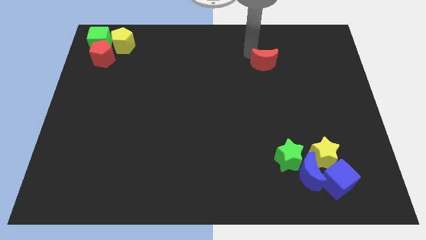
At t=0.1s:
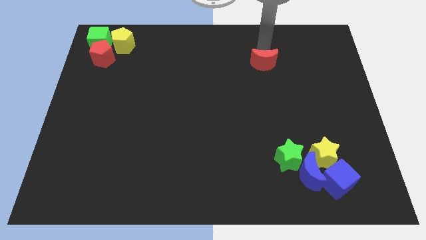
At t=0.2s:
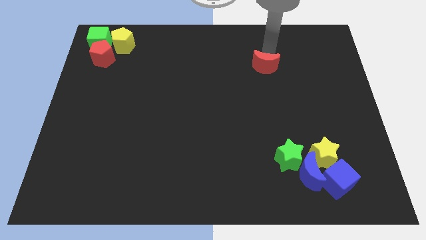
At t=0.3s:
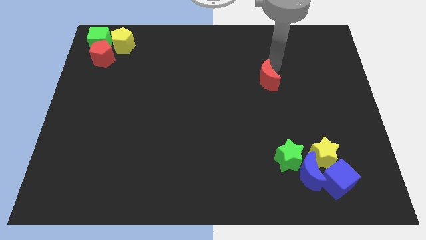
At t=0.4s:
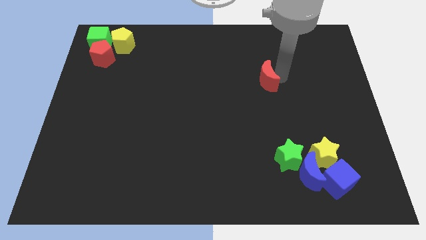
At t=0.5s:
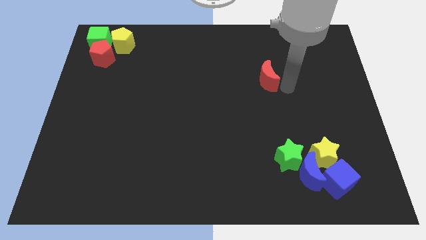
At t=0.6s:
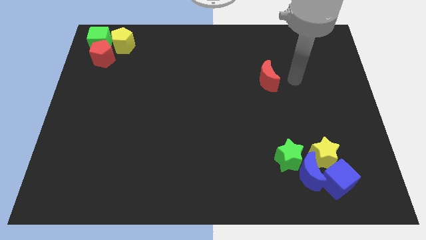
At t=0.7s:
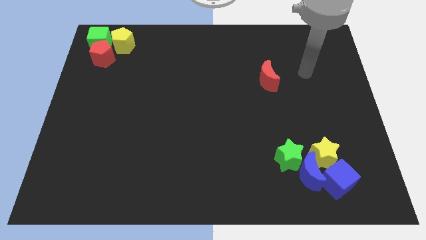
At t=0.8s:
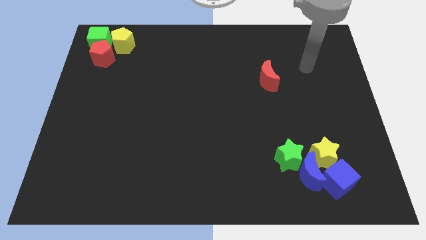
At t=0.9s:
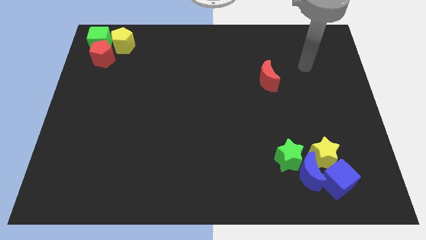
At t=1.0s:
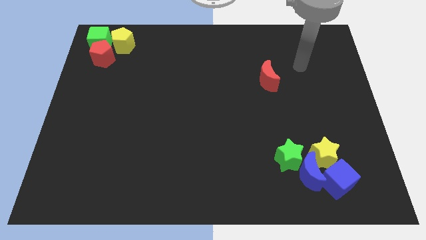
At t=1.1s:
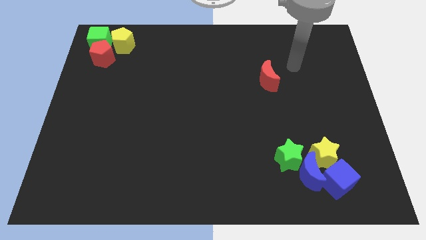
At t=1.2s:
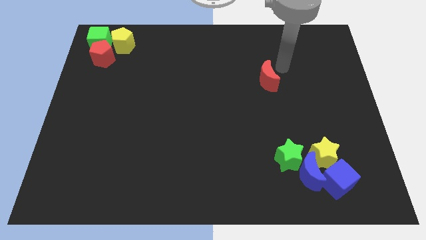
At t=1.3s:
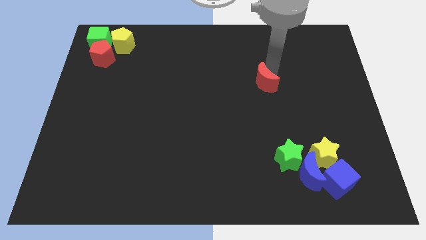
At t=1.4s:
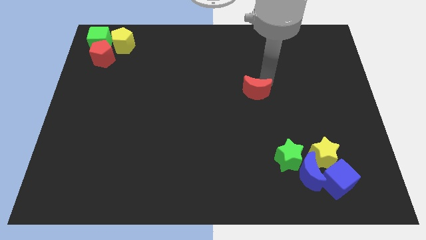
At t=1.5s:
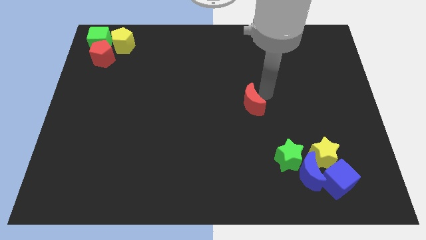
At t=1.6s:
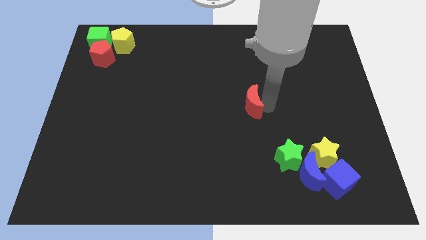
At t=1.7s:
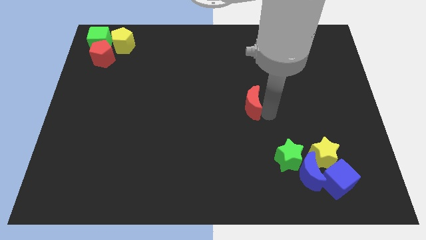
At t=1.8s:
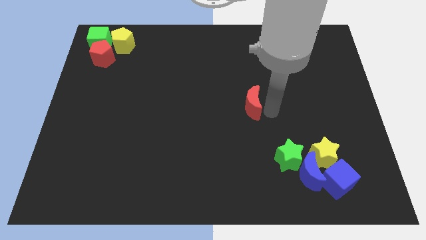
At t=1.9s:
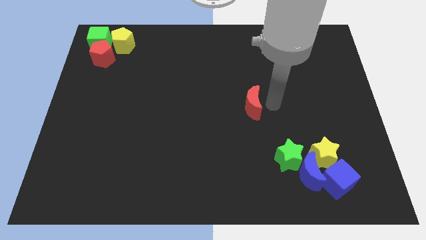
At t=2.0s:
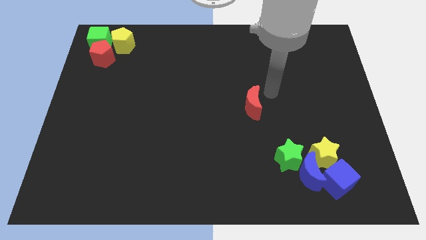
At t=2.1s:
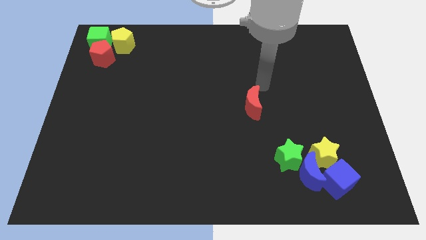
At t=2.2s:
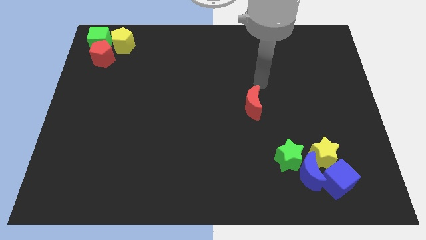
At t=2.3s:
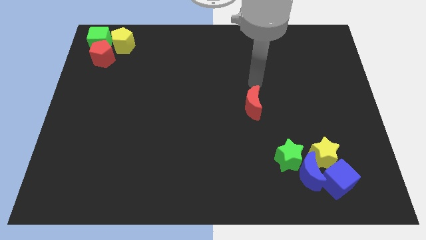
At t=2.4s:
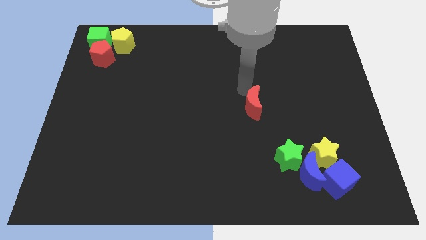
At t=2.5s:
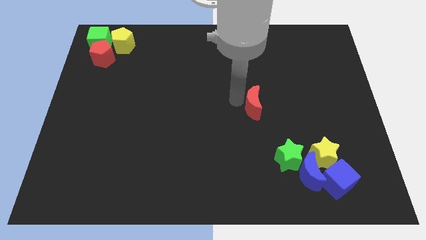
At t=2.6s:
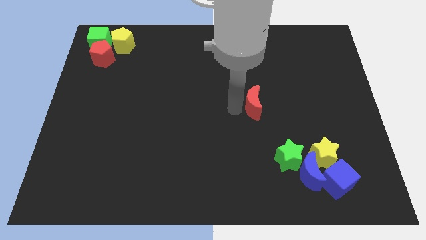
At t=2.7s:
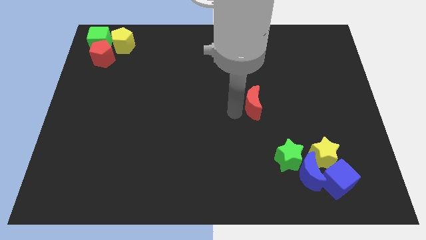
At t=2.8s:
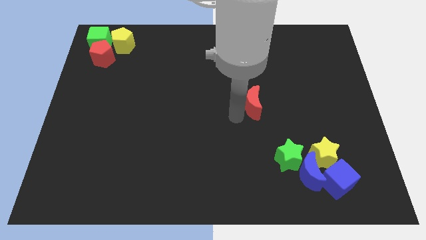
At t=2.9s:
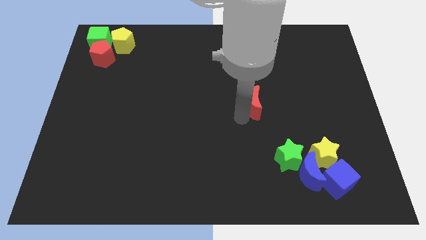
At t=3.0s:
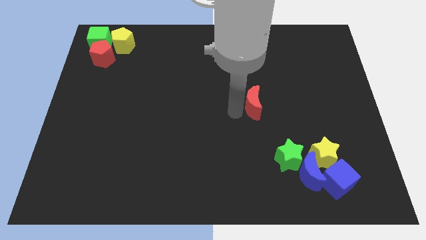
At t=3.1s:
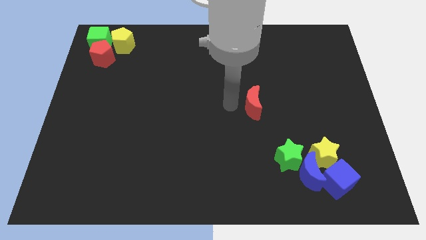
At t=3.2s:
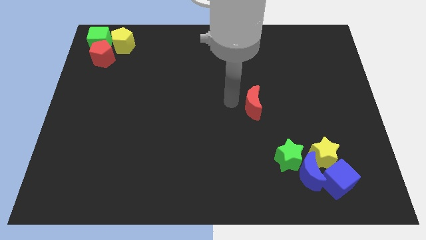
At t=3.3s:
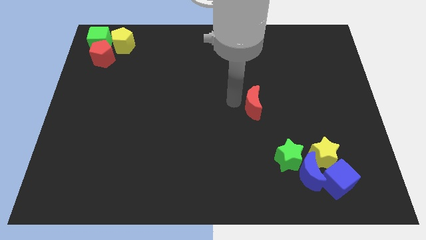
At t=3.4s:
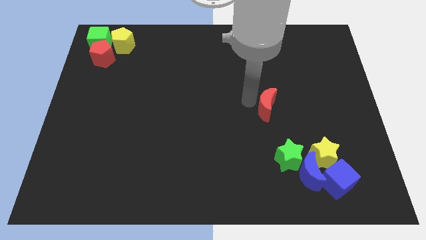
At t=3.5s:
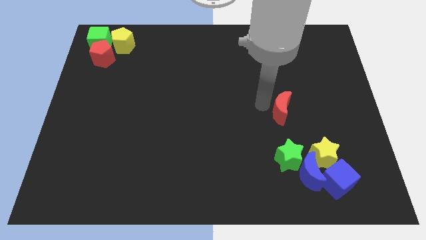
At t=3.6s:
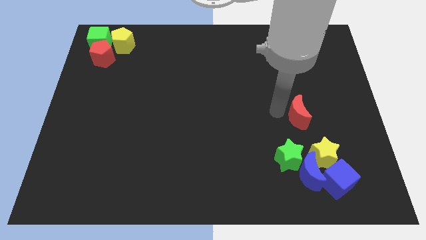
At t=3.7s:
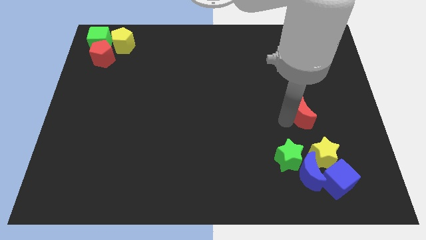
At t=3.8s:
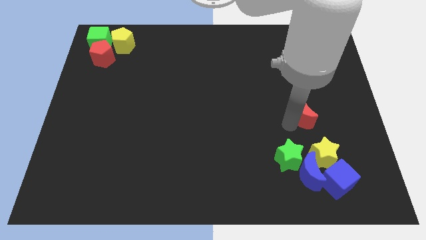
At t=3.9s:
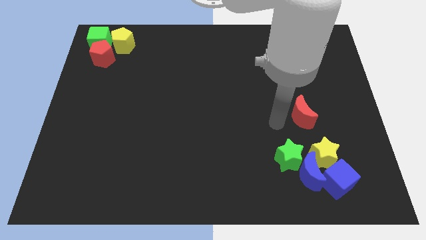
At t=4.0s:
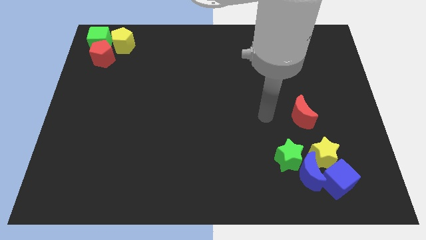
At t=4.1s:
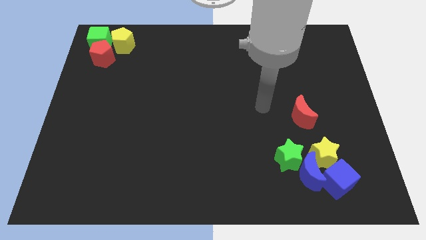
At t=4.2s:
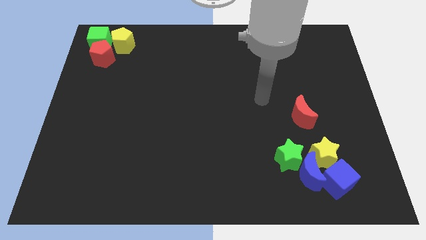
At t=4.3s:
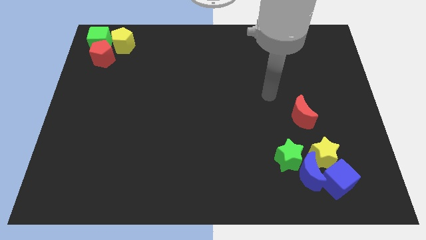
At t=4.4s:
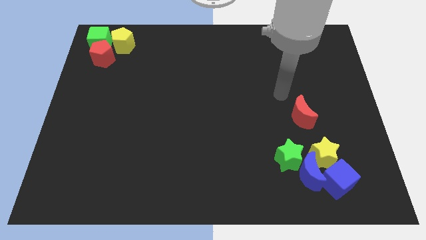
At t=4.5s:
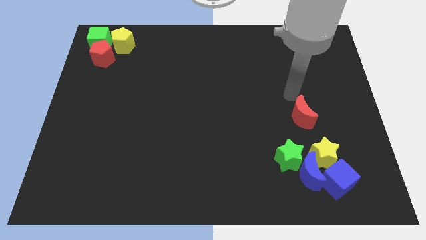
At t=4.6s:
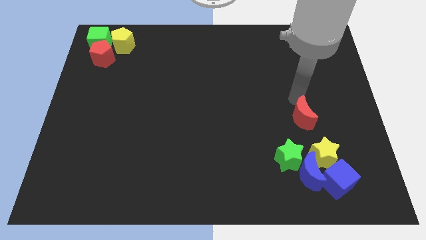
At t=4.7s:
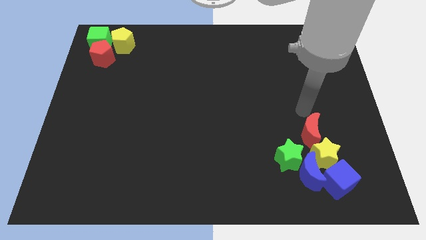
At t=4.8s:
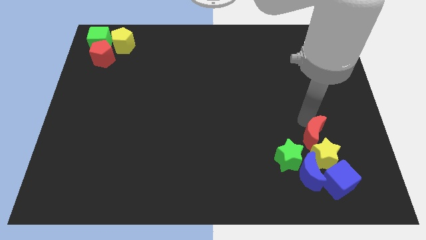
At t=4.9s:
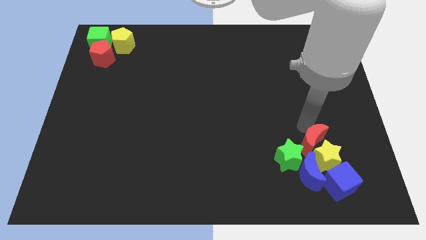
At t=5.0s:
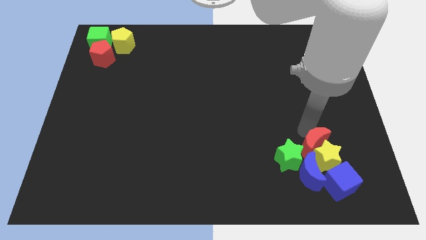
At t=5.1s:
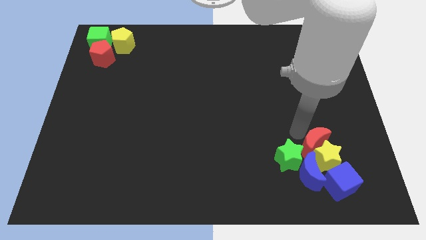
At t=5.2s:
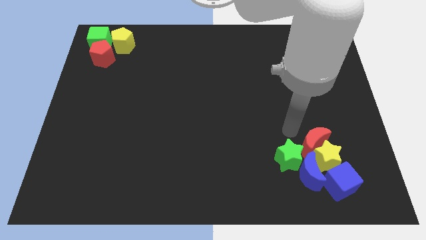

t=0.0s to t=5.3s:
move the red crescent into the top of the yellow star

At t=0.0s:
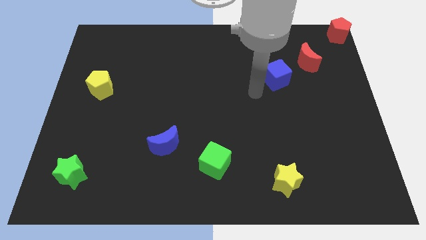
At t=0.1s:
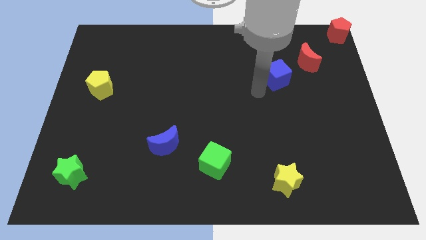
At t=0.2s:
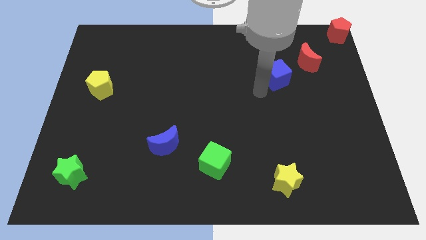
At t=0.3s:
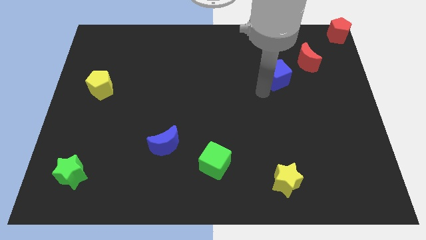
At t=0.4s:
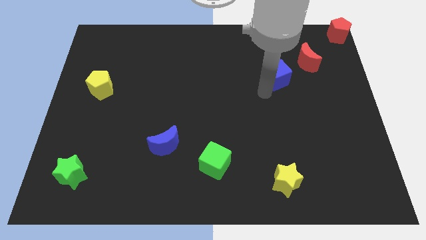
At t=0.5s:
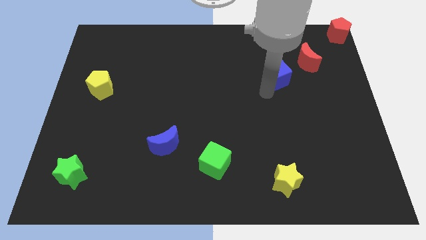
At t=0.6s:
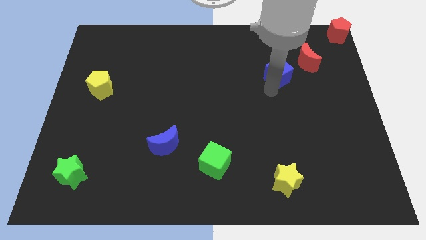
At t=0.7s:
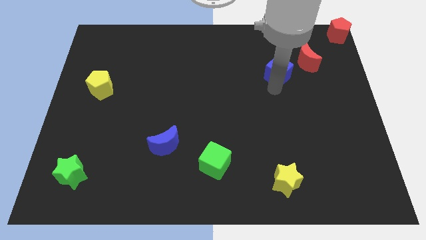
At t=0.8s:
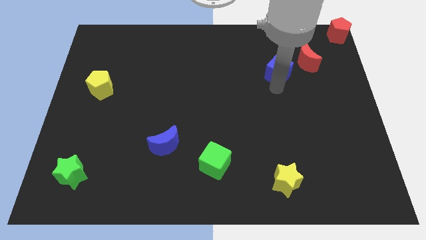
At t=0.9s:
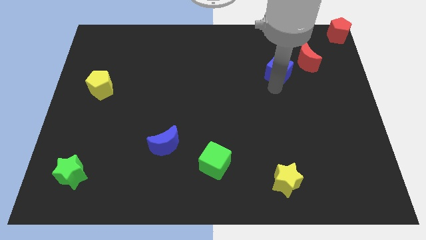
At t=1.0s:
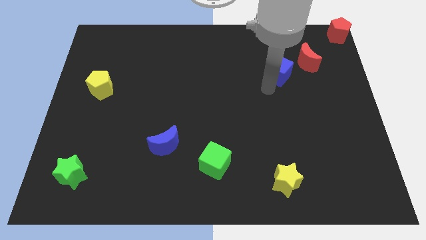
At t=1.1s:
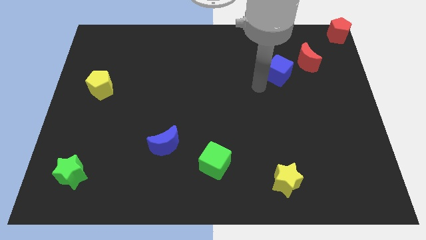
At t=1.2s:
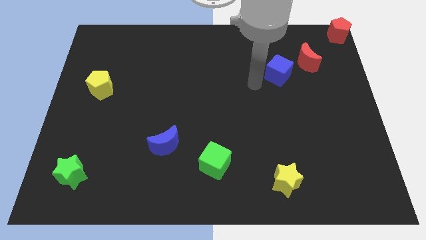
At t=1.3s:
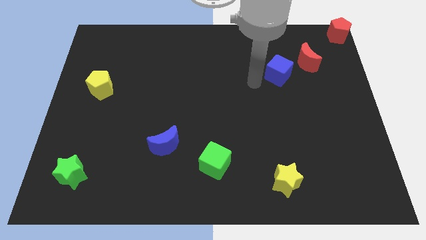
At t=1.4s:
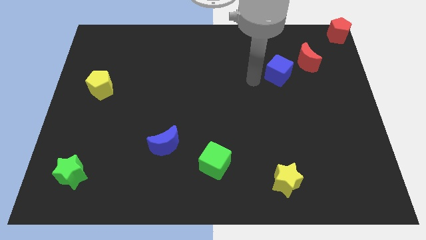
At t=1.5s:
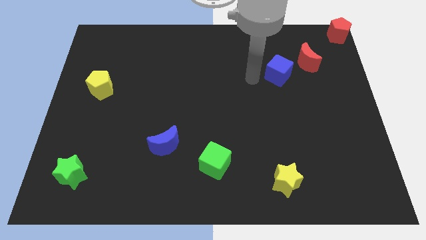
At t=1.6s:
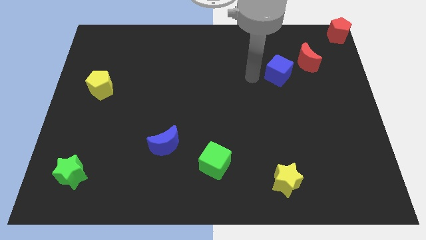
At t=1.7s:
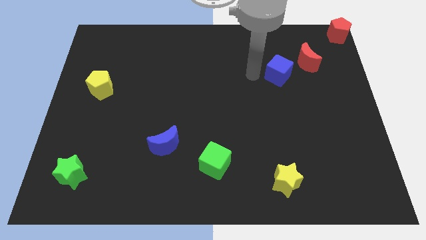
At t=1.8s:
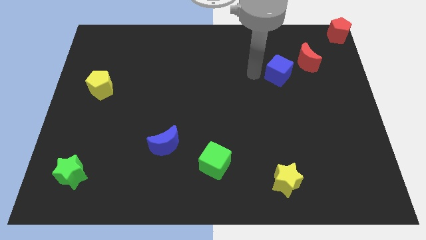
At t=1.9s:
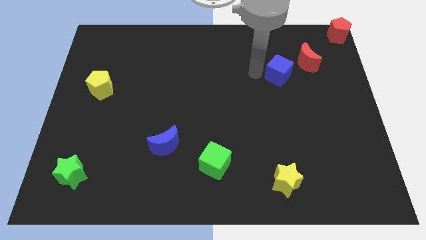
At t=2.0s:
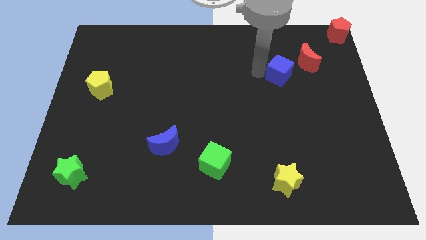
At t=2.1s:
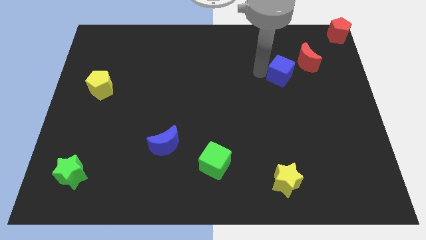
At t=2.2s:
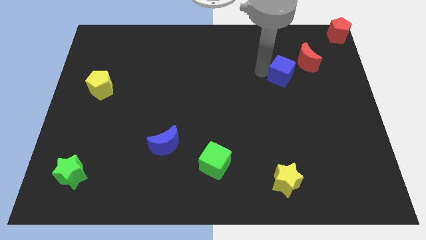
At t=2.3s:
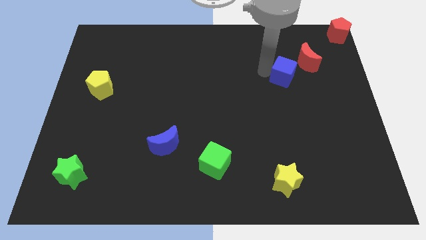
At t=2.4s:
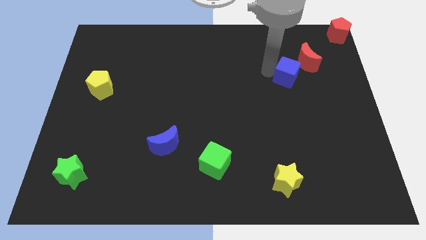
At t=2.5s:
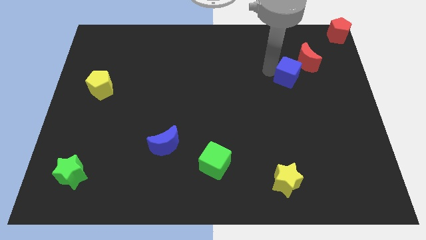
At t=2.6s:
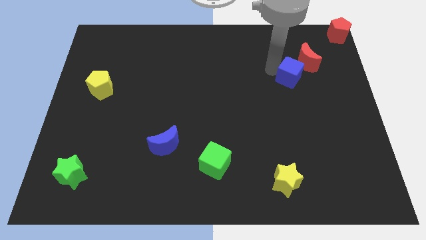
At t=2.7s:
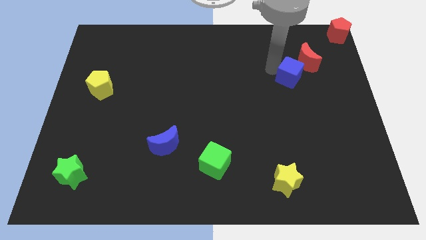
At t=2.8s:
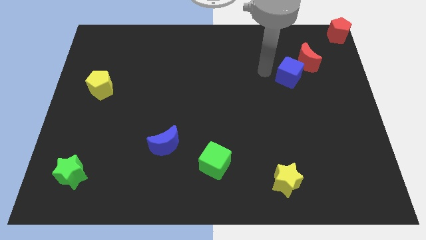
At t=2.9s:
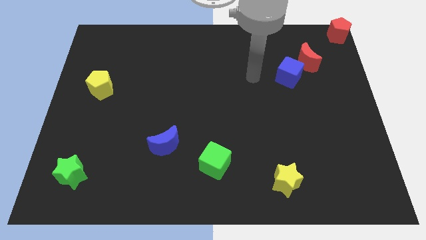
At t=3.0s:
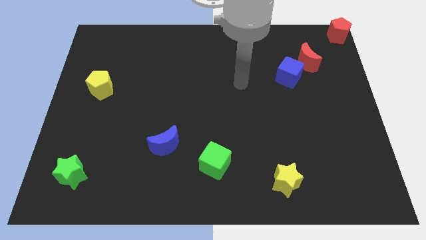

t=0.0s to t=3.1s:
push the blue cube into the red crescent

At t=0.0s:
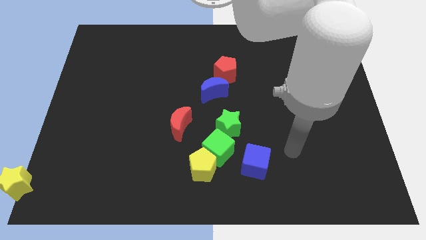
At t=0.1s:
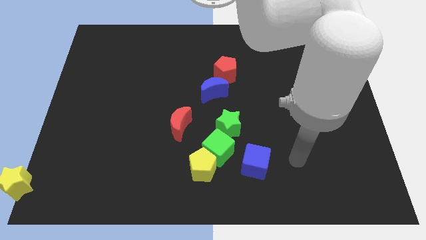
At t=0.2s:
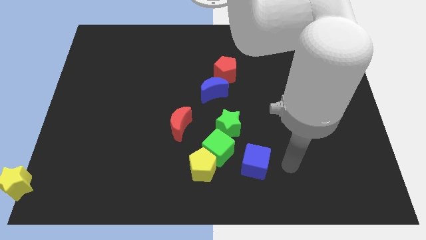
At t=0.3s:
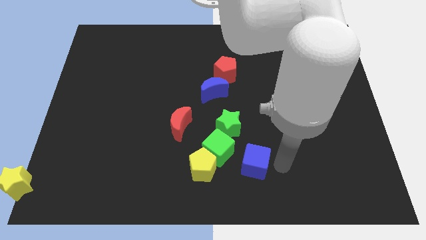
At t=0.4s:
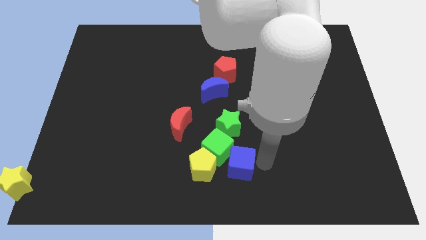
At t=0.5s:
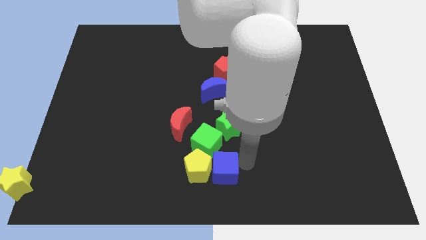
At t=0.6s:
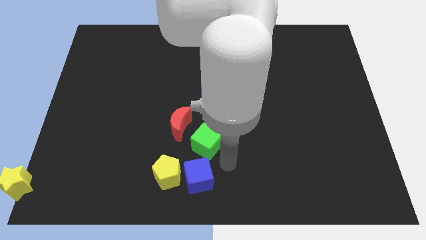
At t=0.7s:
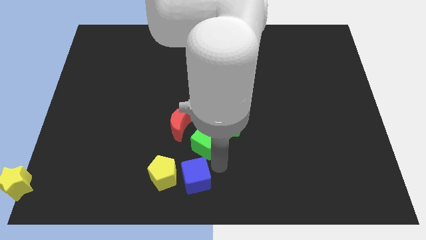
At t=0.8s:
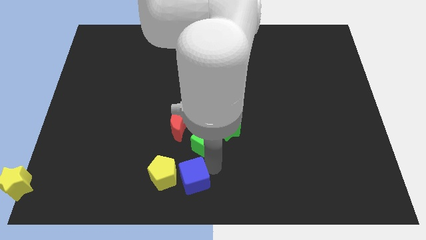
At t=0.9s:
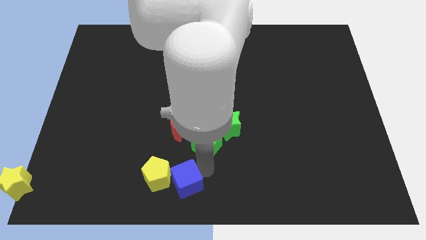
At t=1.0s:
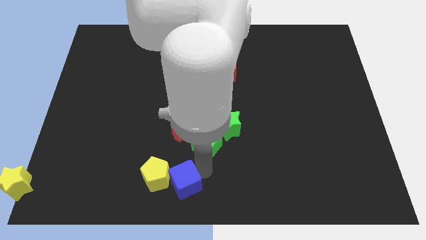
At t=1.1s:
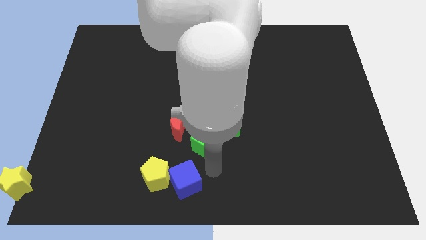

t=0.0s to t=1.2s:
place blue cube below green cube
